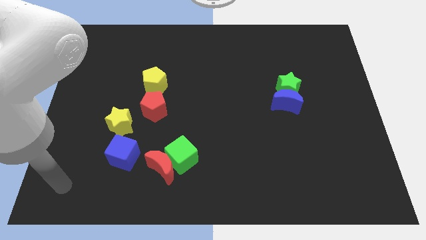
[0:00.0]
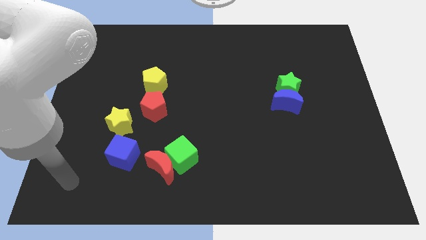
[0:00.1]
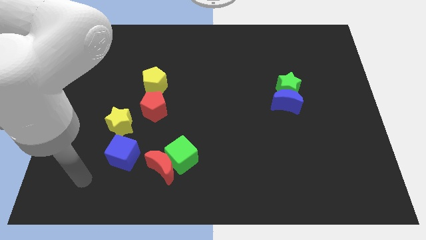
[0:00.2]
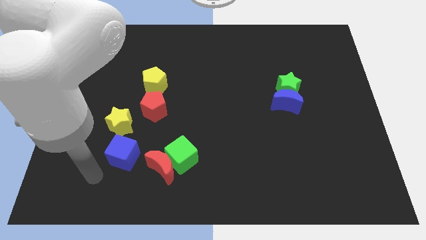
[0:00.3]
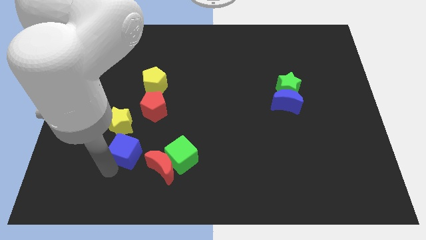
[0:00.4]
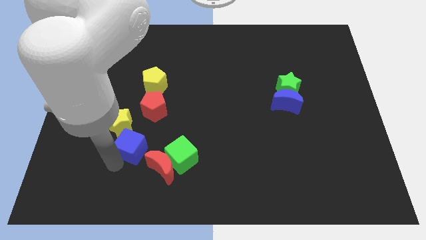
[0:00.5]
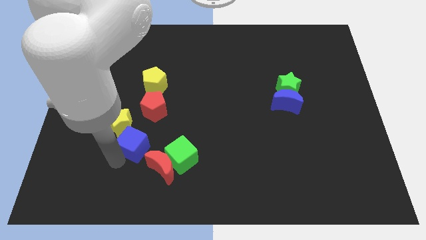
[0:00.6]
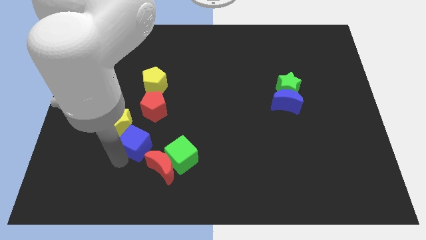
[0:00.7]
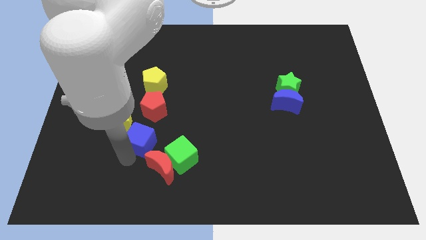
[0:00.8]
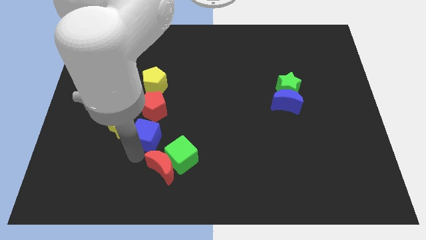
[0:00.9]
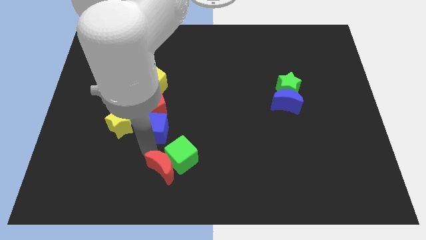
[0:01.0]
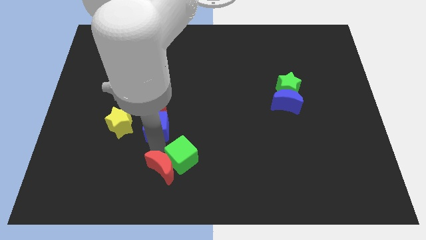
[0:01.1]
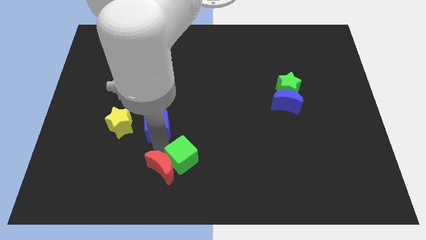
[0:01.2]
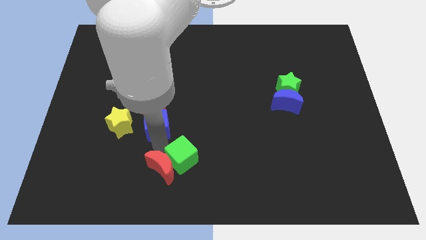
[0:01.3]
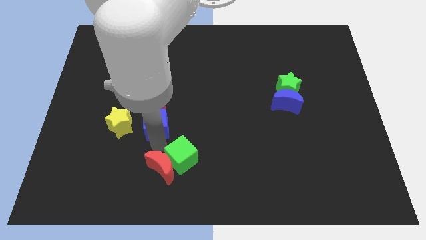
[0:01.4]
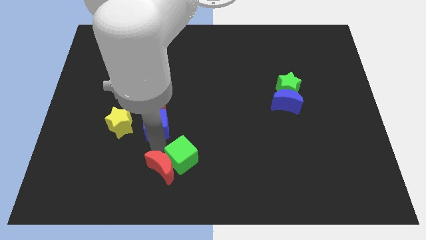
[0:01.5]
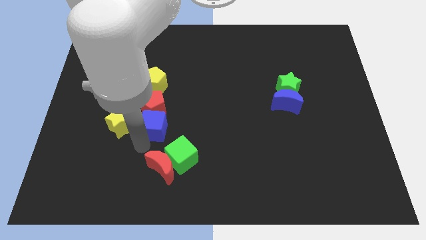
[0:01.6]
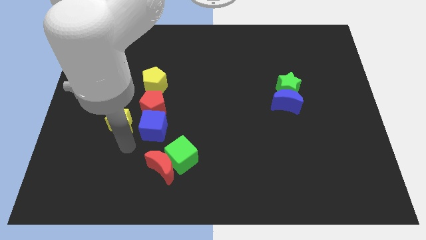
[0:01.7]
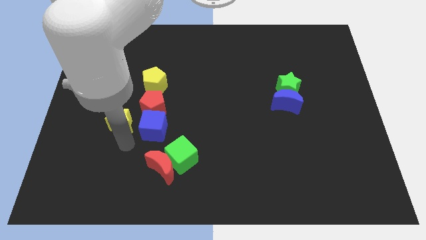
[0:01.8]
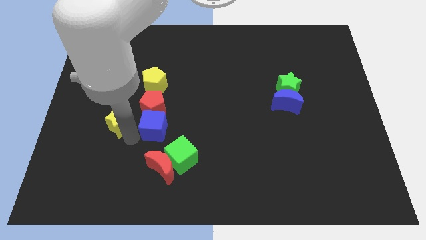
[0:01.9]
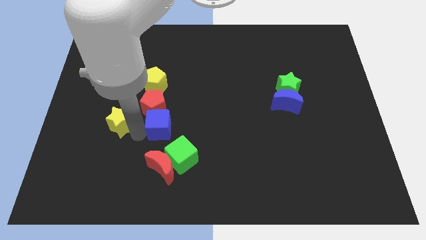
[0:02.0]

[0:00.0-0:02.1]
push the blue cube to the bottom of the red pentagon

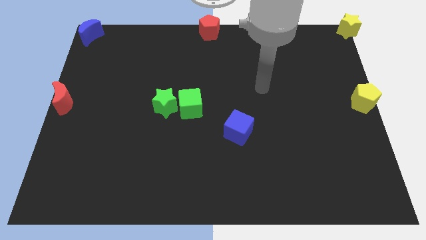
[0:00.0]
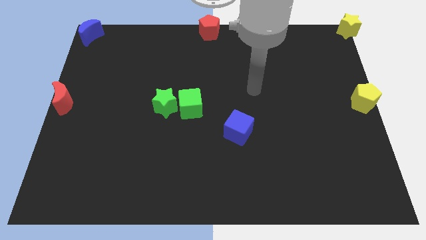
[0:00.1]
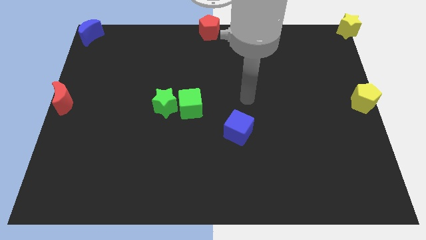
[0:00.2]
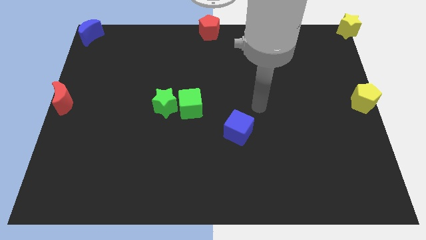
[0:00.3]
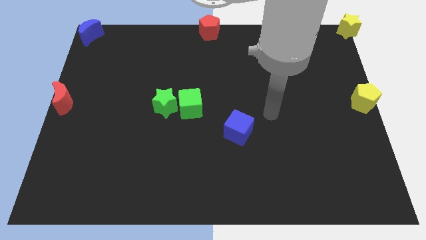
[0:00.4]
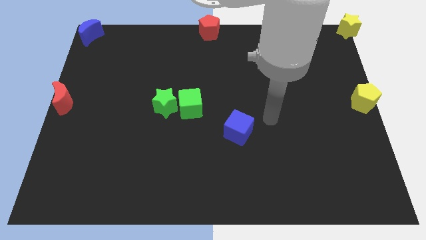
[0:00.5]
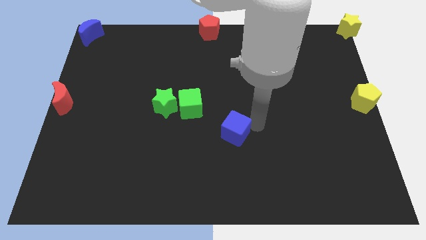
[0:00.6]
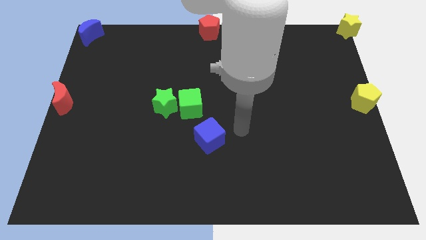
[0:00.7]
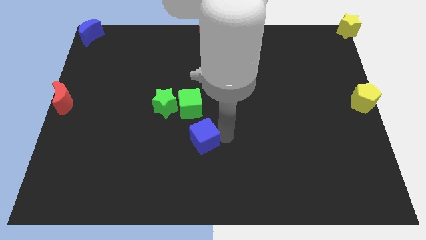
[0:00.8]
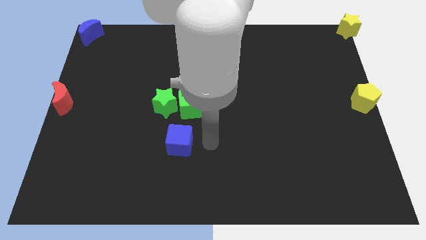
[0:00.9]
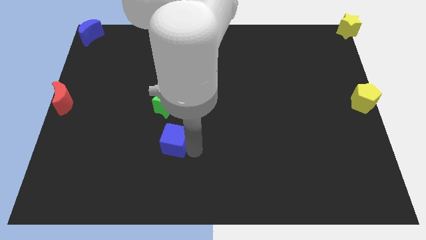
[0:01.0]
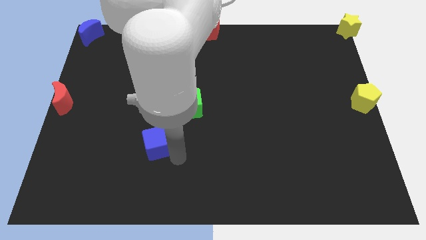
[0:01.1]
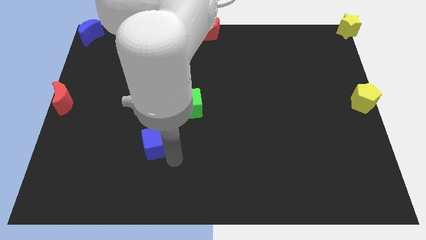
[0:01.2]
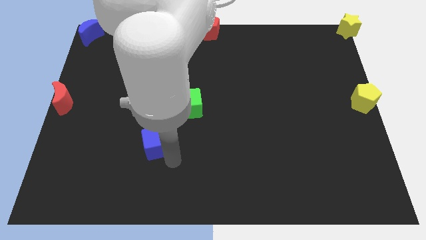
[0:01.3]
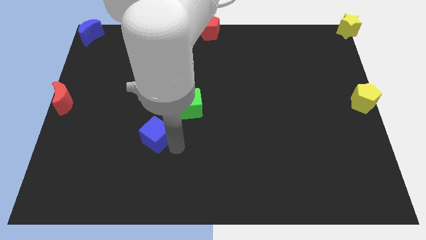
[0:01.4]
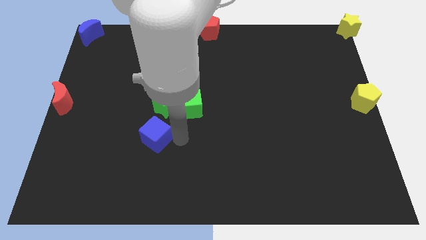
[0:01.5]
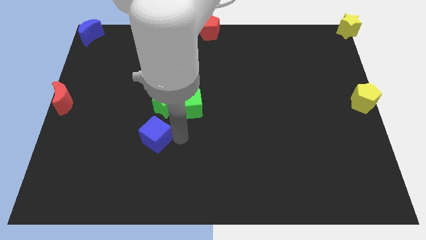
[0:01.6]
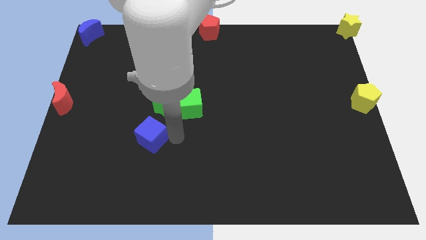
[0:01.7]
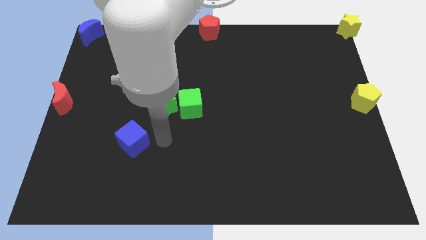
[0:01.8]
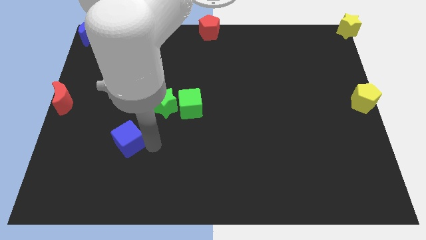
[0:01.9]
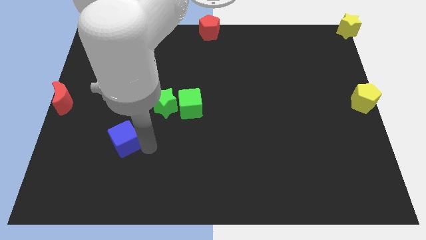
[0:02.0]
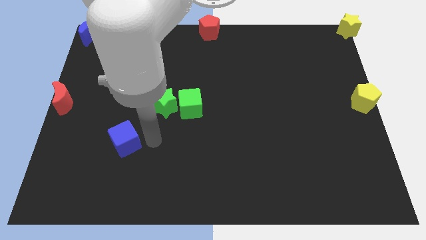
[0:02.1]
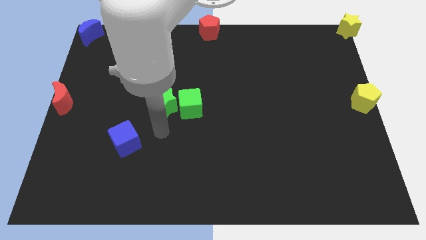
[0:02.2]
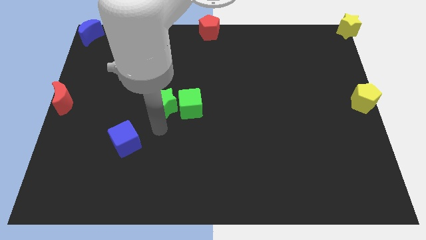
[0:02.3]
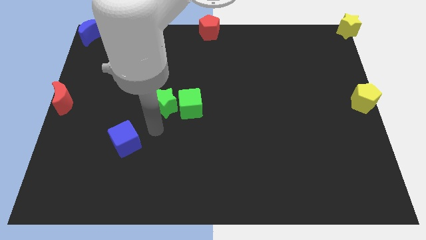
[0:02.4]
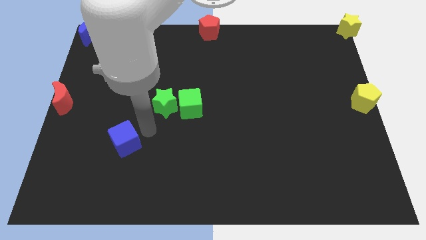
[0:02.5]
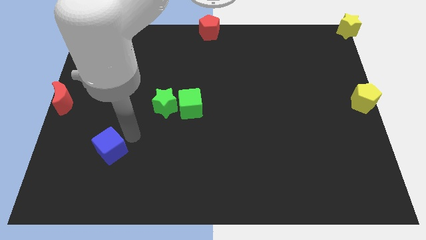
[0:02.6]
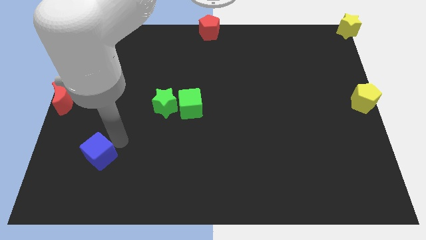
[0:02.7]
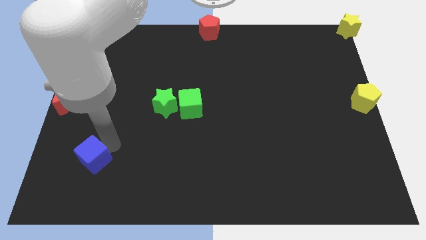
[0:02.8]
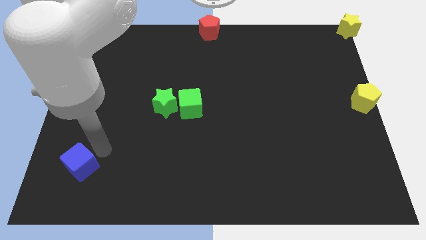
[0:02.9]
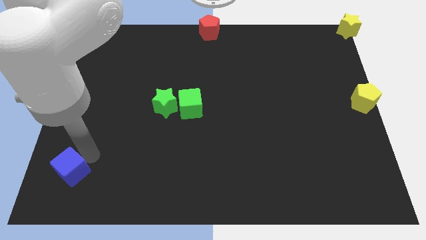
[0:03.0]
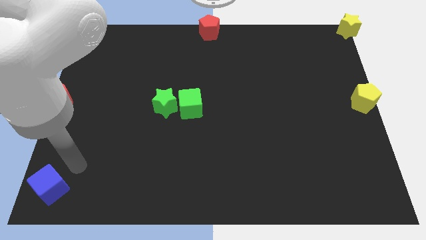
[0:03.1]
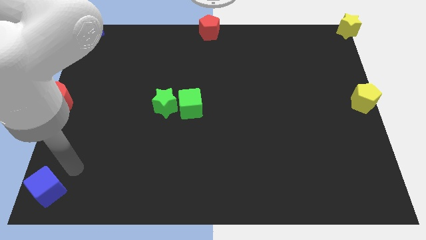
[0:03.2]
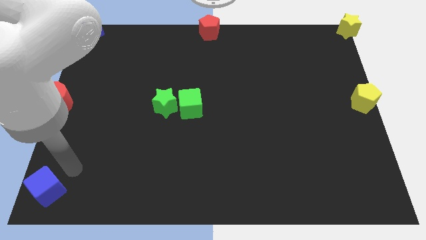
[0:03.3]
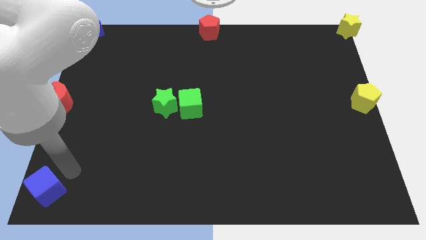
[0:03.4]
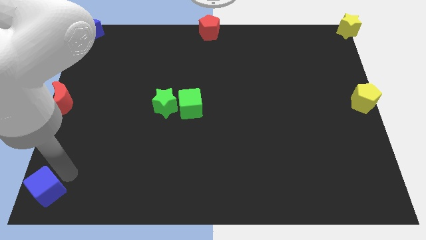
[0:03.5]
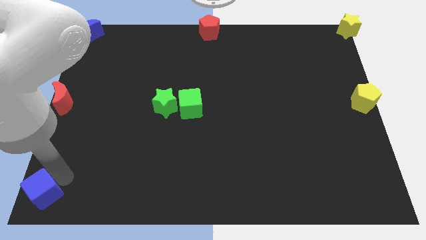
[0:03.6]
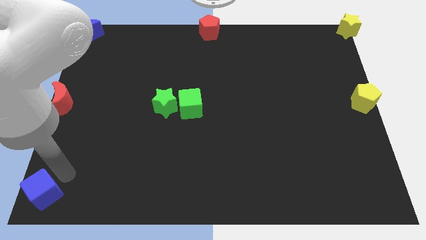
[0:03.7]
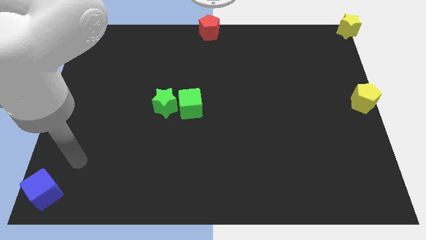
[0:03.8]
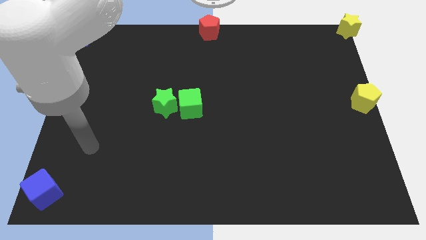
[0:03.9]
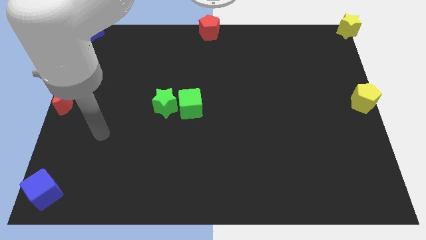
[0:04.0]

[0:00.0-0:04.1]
push the blue cube to the left bottom

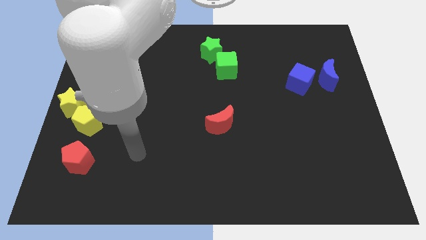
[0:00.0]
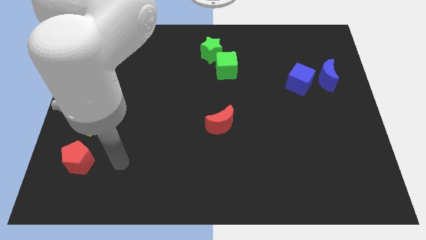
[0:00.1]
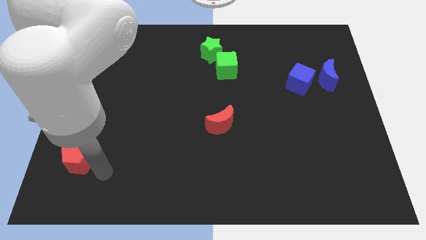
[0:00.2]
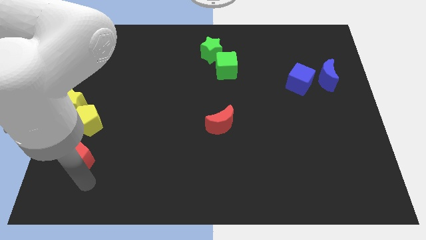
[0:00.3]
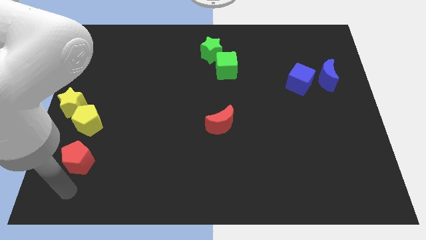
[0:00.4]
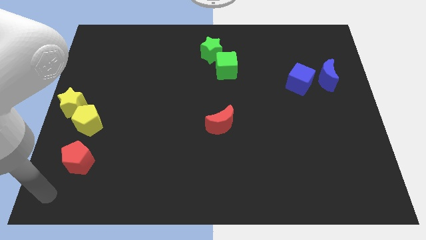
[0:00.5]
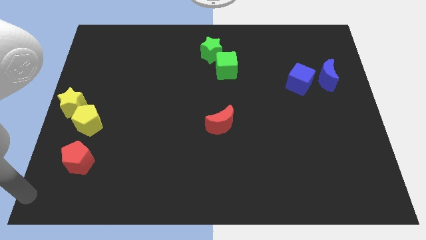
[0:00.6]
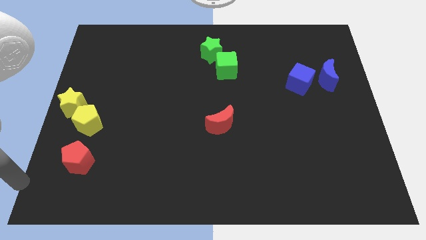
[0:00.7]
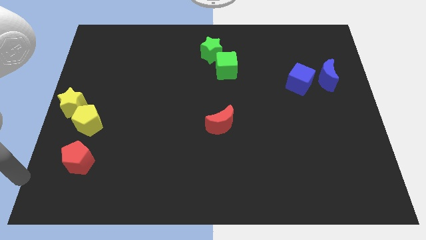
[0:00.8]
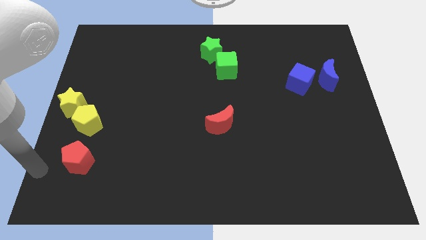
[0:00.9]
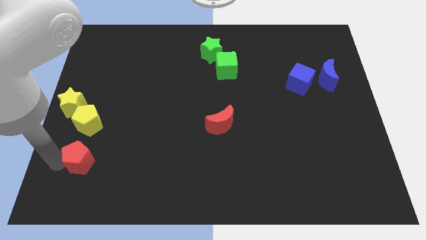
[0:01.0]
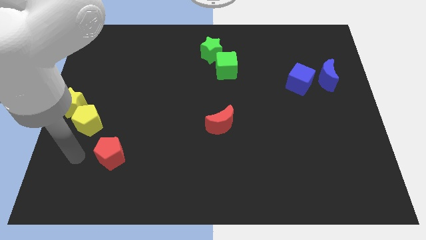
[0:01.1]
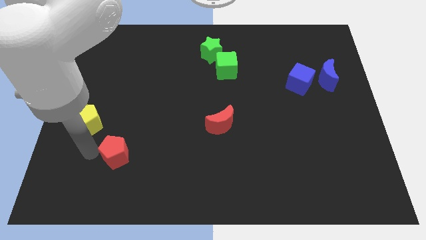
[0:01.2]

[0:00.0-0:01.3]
move the red pentagon slightly towards the right

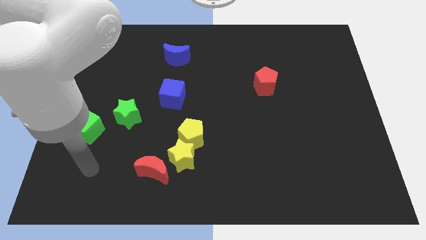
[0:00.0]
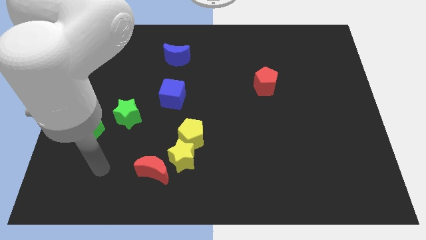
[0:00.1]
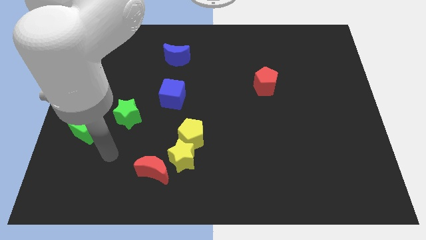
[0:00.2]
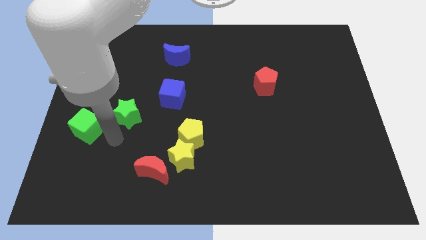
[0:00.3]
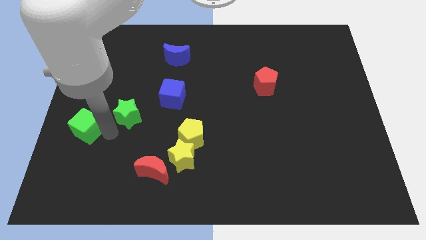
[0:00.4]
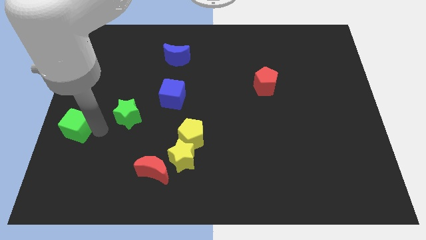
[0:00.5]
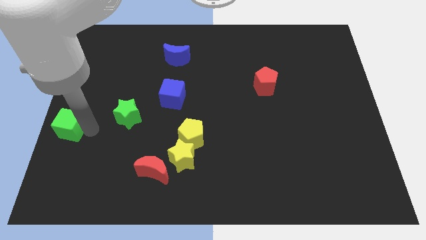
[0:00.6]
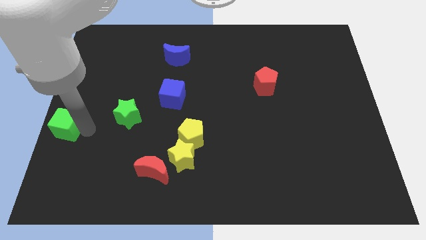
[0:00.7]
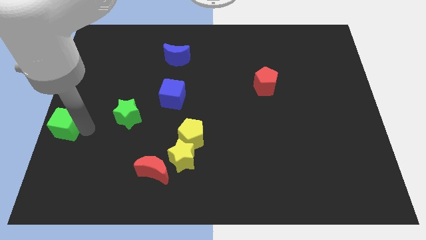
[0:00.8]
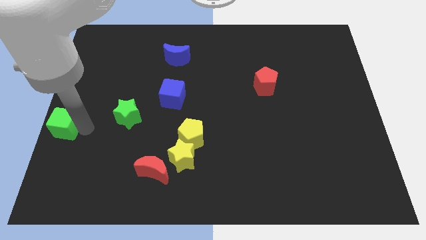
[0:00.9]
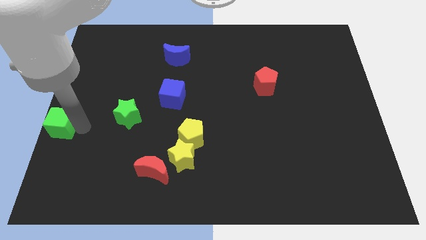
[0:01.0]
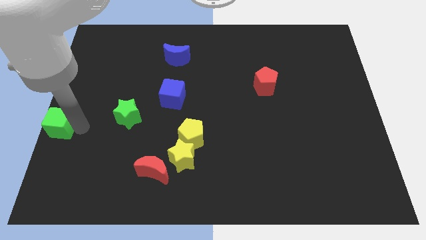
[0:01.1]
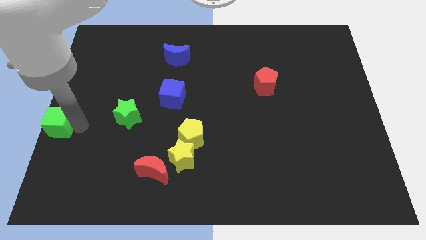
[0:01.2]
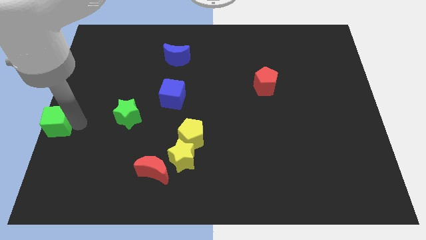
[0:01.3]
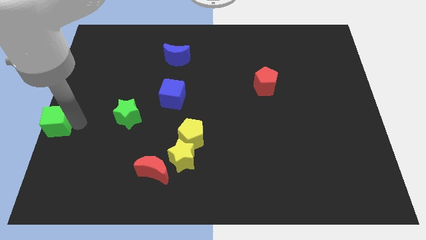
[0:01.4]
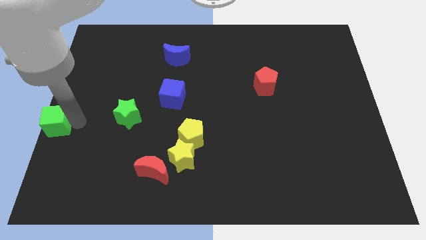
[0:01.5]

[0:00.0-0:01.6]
slide the green cube to the left side of the table
